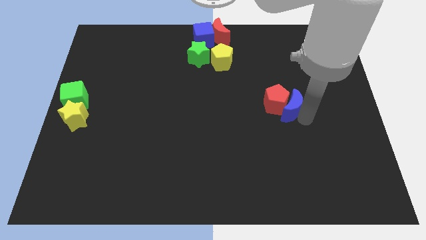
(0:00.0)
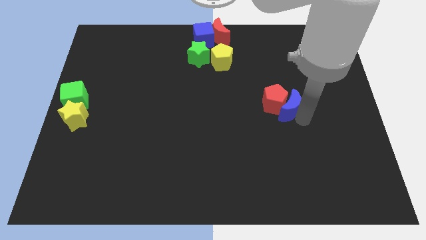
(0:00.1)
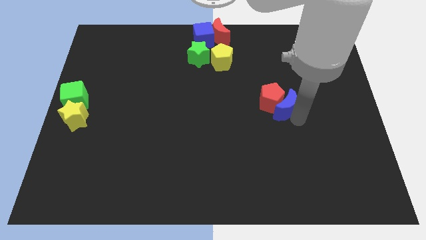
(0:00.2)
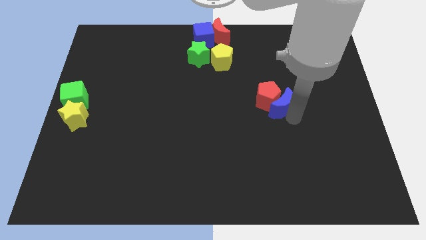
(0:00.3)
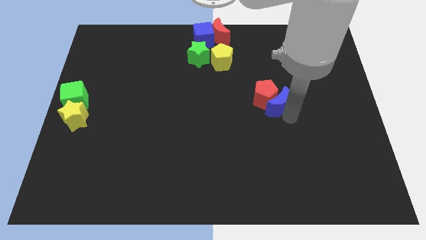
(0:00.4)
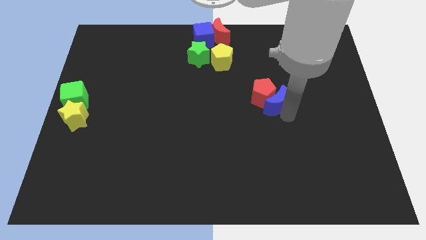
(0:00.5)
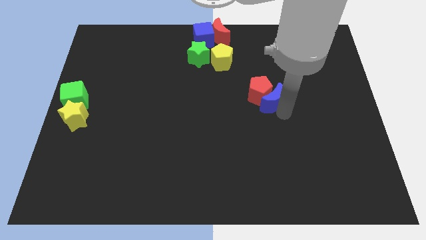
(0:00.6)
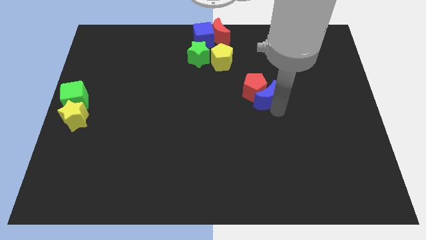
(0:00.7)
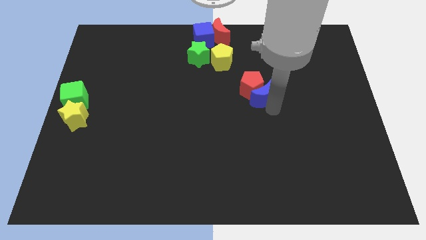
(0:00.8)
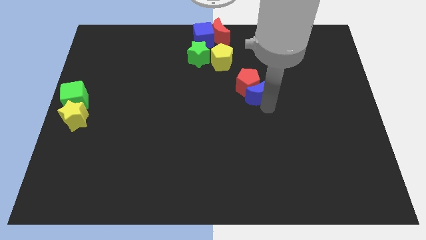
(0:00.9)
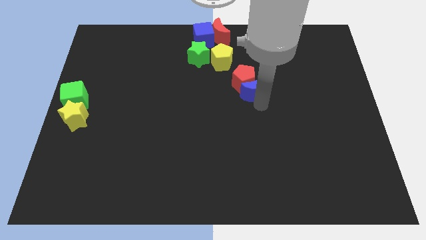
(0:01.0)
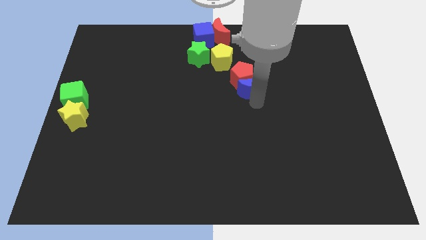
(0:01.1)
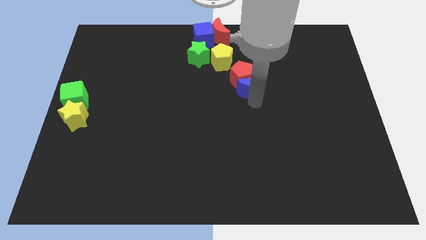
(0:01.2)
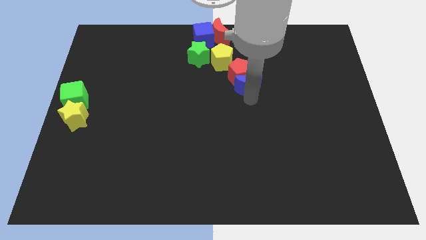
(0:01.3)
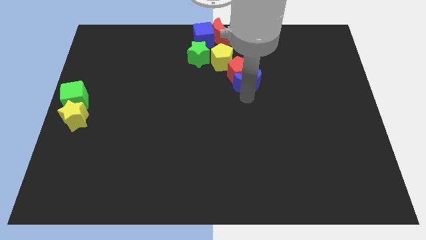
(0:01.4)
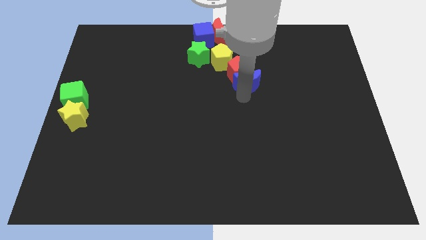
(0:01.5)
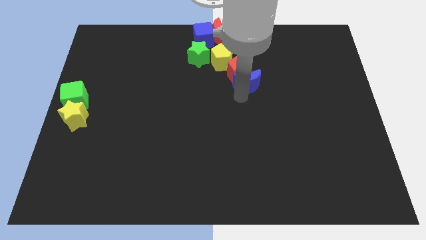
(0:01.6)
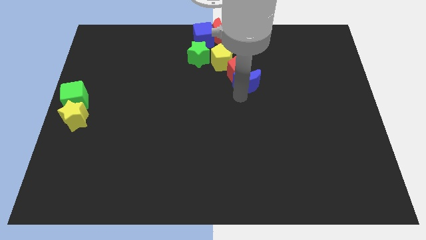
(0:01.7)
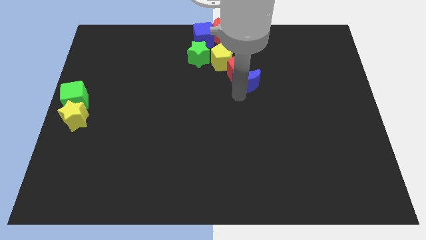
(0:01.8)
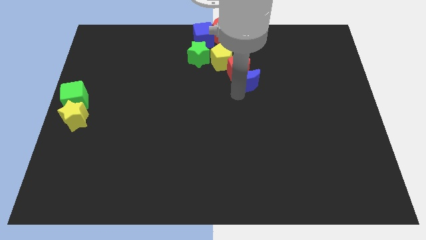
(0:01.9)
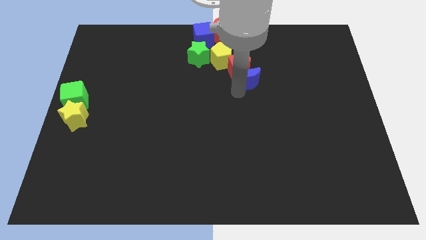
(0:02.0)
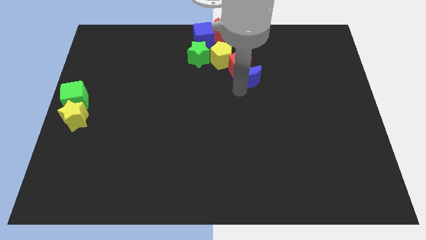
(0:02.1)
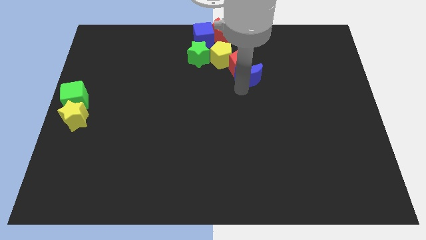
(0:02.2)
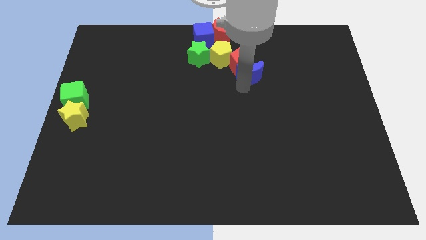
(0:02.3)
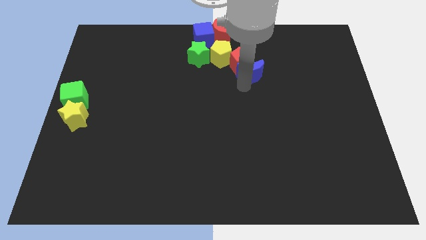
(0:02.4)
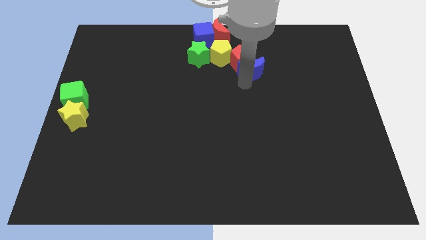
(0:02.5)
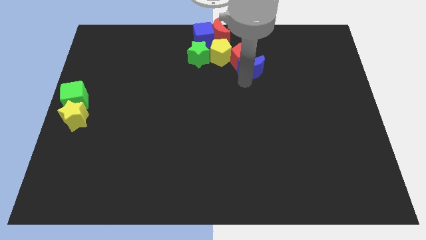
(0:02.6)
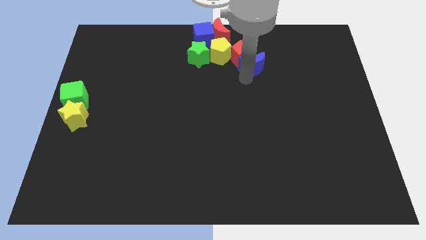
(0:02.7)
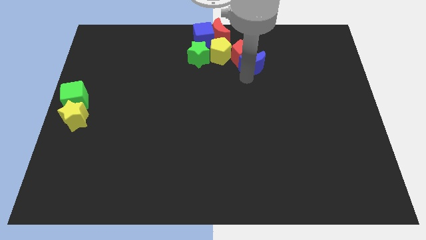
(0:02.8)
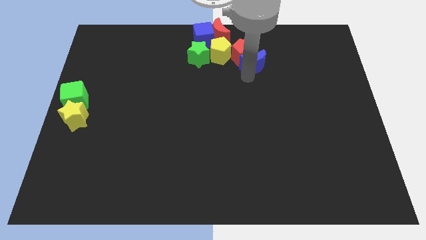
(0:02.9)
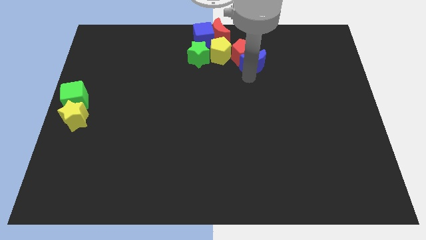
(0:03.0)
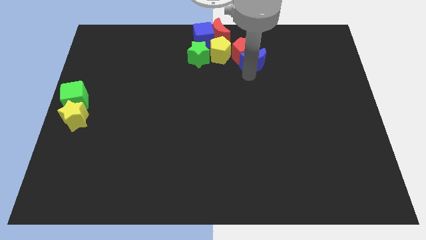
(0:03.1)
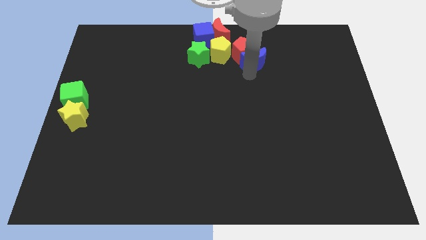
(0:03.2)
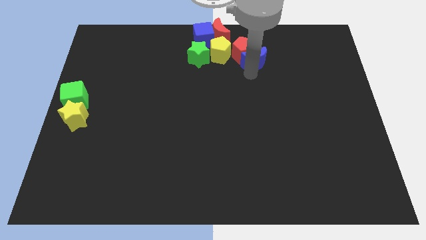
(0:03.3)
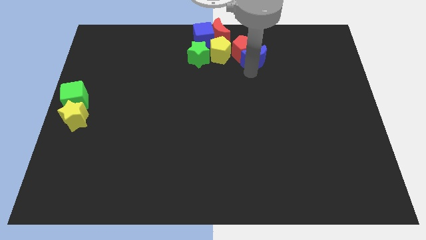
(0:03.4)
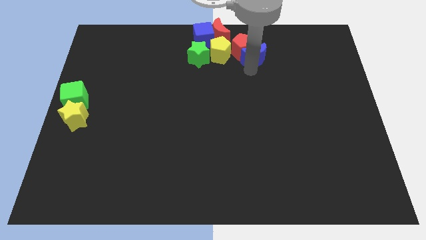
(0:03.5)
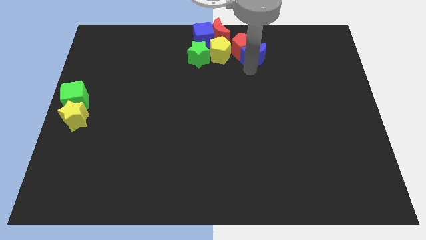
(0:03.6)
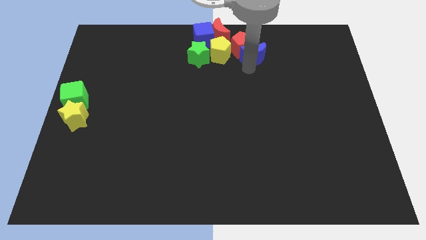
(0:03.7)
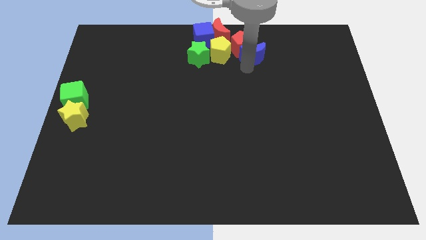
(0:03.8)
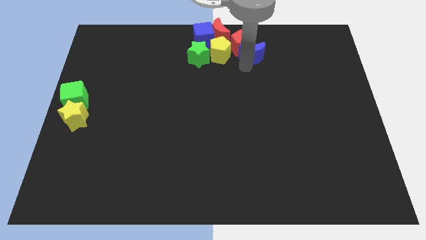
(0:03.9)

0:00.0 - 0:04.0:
move the blue crescent along with the red pentagon towards the top center

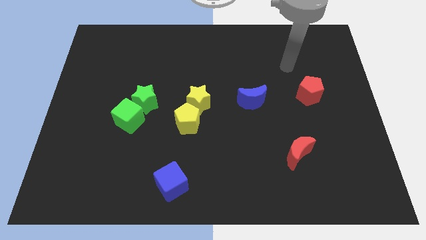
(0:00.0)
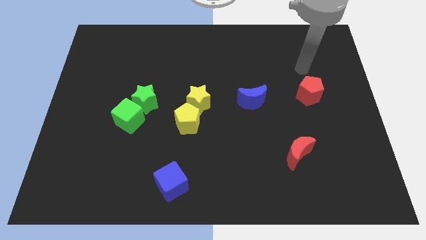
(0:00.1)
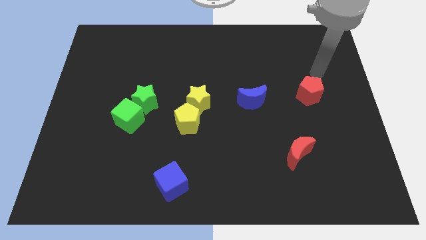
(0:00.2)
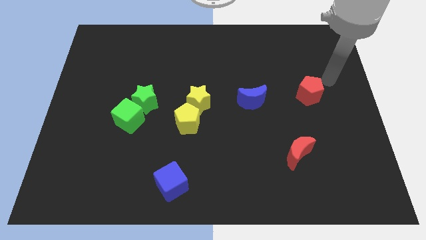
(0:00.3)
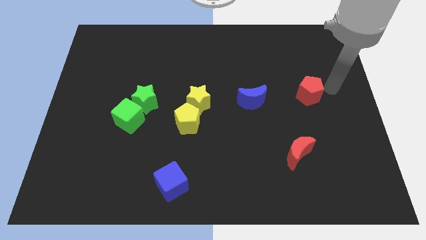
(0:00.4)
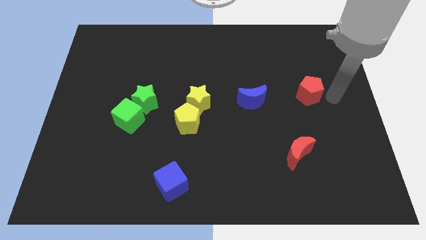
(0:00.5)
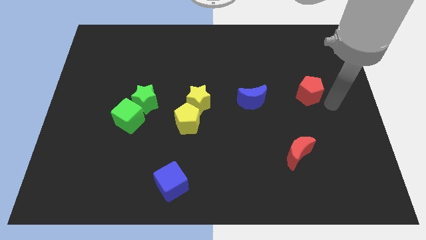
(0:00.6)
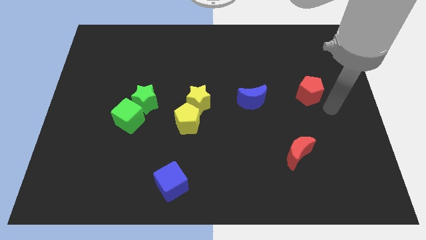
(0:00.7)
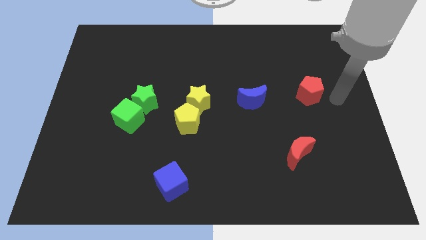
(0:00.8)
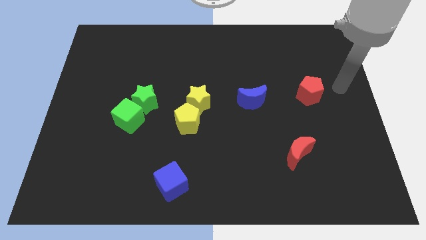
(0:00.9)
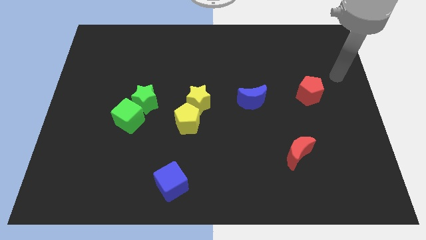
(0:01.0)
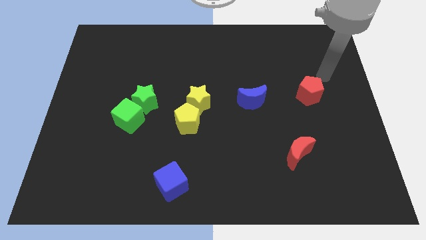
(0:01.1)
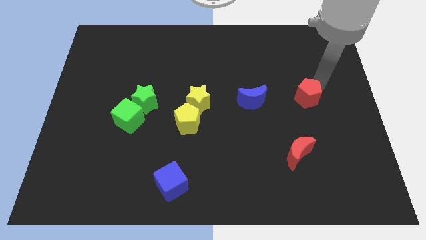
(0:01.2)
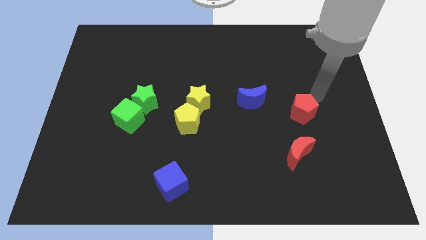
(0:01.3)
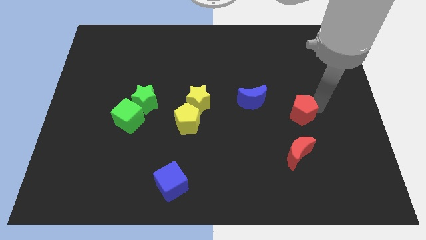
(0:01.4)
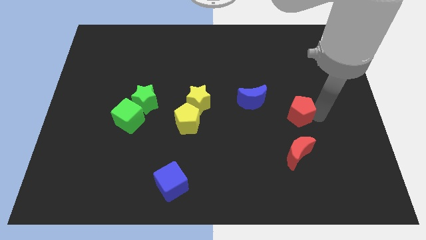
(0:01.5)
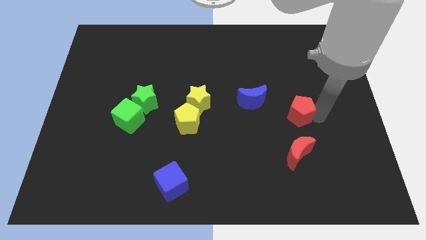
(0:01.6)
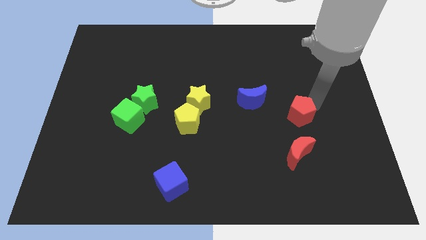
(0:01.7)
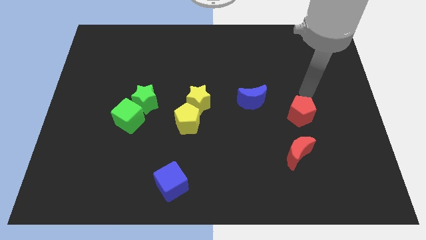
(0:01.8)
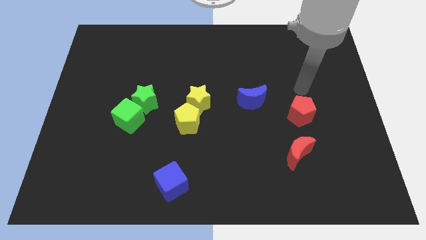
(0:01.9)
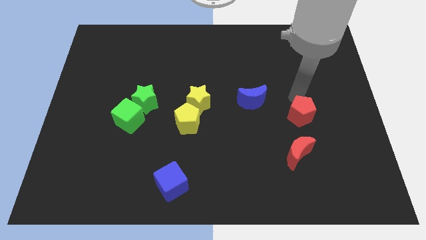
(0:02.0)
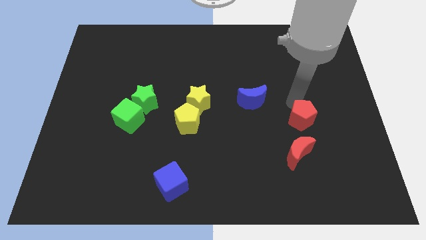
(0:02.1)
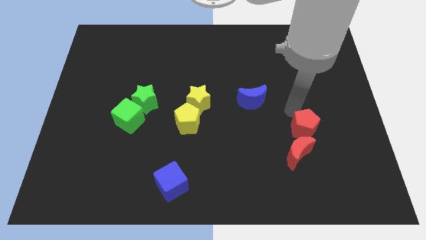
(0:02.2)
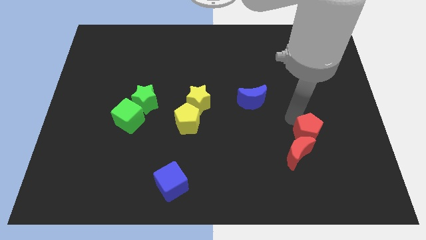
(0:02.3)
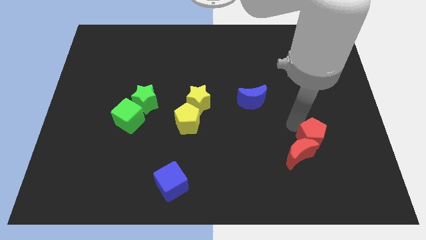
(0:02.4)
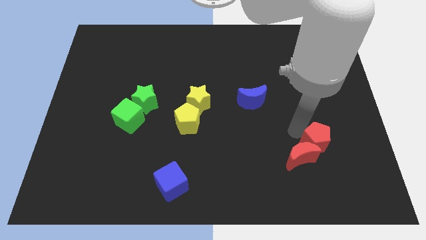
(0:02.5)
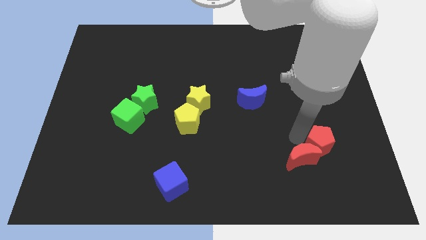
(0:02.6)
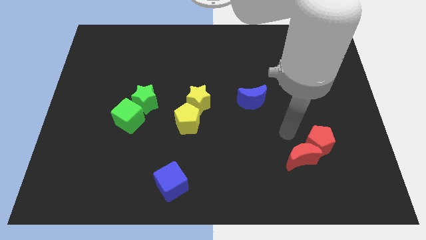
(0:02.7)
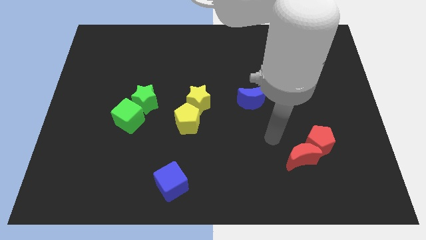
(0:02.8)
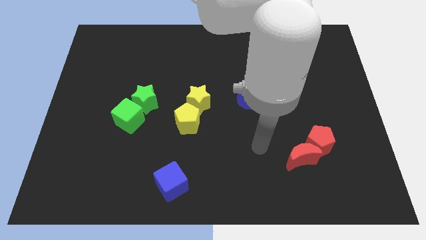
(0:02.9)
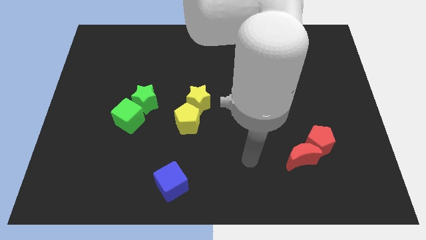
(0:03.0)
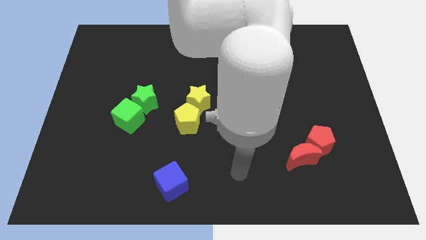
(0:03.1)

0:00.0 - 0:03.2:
move the red pentagon into red crescent

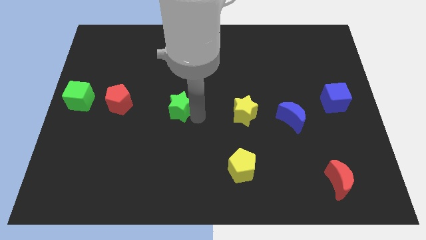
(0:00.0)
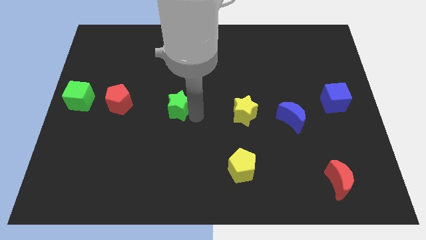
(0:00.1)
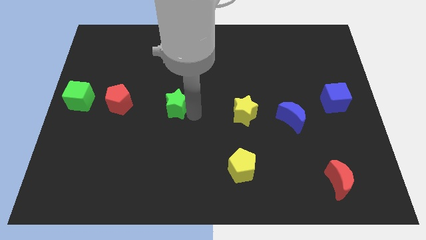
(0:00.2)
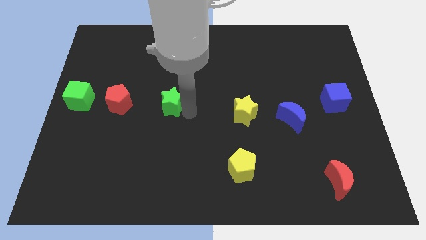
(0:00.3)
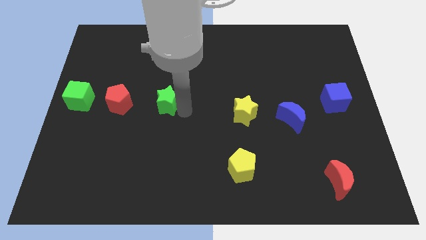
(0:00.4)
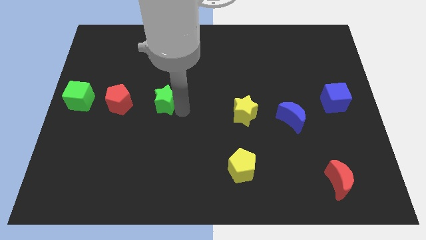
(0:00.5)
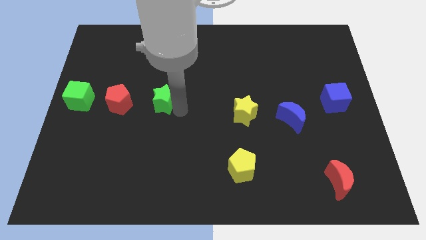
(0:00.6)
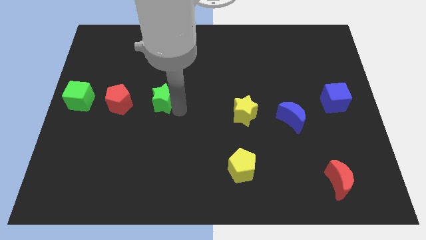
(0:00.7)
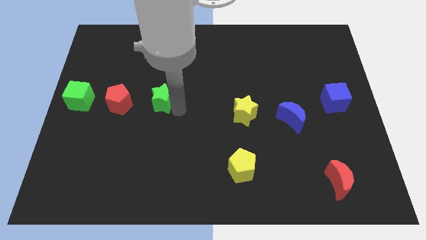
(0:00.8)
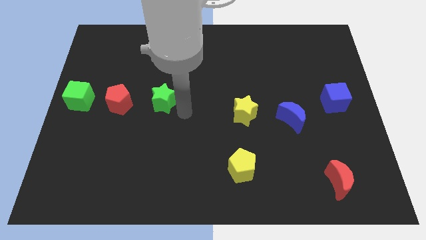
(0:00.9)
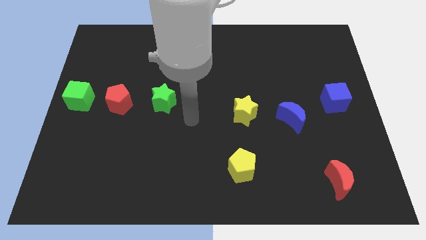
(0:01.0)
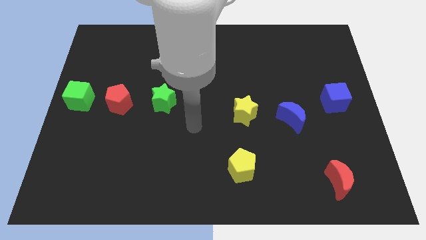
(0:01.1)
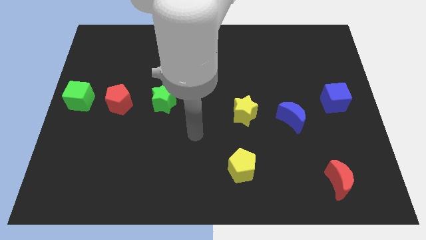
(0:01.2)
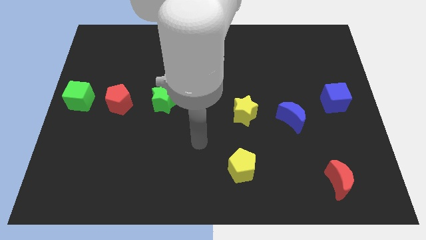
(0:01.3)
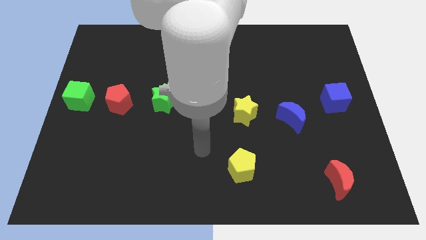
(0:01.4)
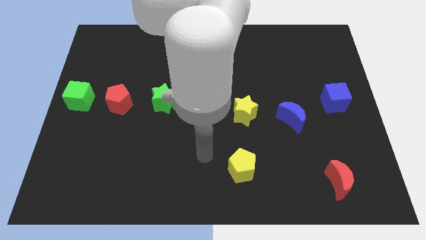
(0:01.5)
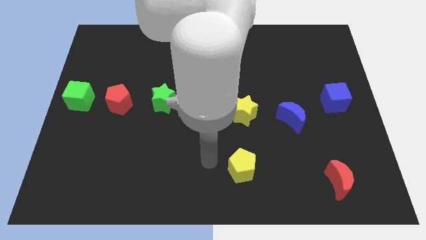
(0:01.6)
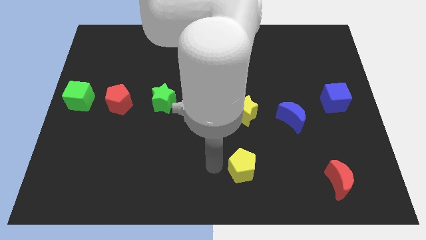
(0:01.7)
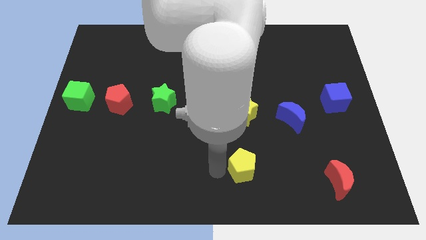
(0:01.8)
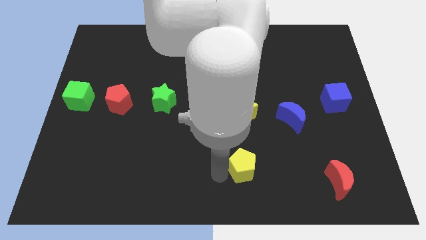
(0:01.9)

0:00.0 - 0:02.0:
move your arm vertically towards the bottom center near to the yellow pentagon

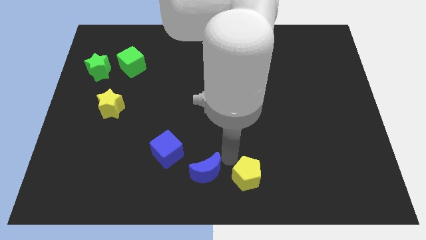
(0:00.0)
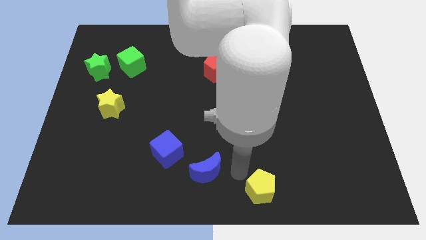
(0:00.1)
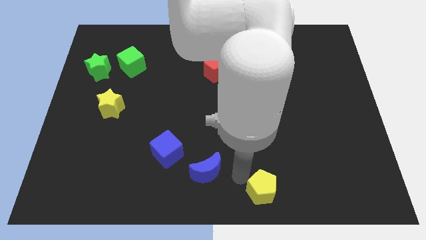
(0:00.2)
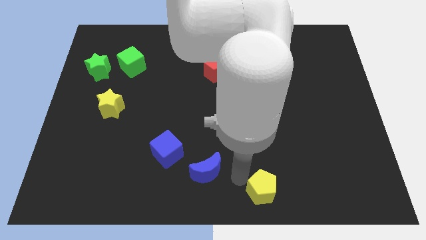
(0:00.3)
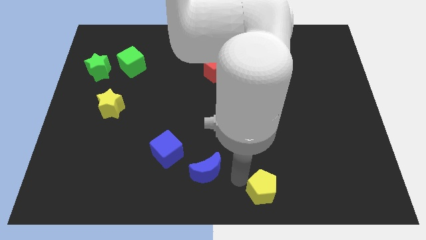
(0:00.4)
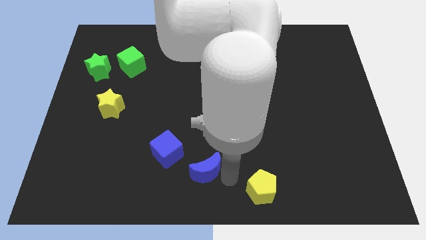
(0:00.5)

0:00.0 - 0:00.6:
slightly move the yellow pentagon towards the bottom center of the board
